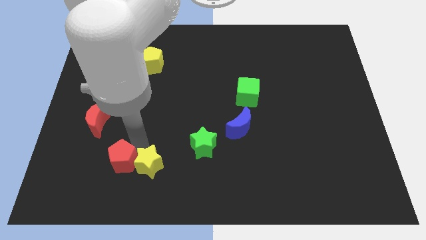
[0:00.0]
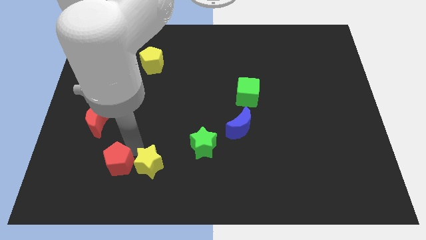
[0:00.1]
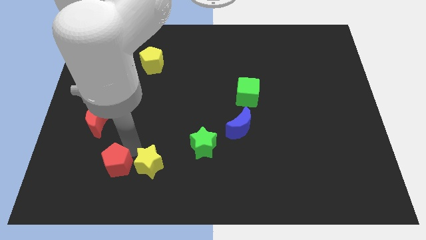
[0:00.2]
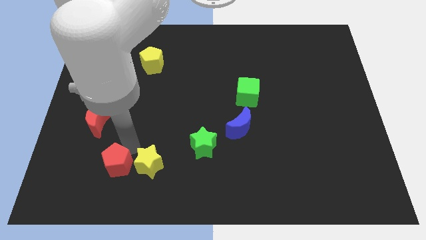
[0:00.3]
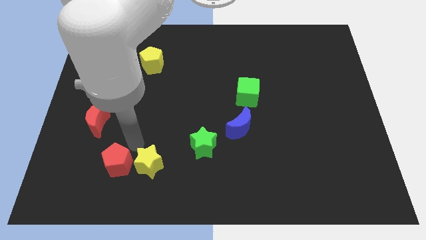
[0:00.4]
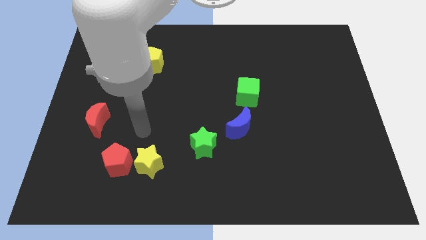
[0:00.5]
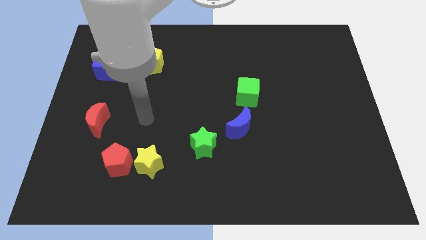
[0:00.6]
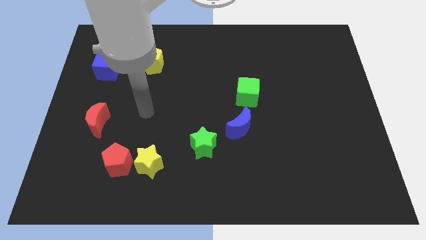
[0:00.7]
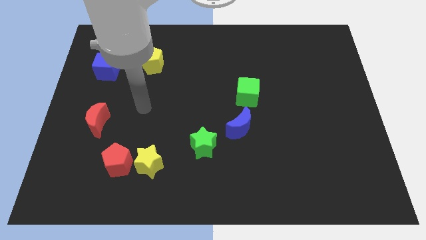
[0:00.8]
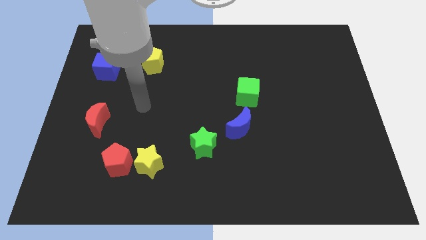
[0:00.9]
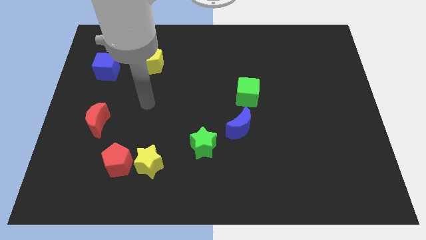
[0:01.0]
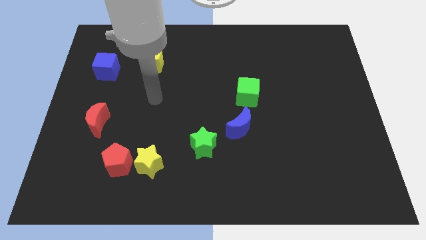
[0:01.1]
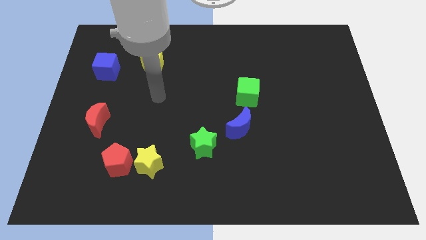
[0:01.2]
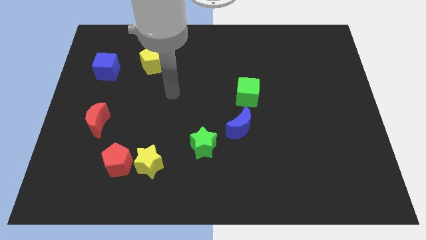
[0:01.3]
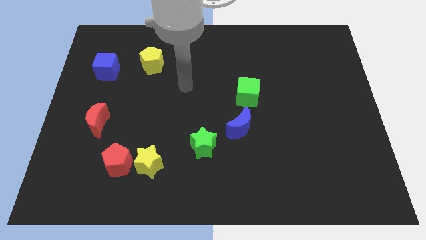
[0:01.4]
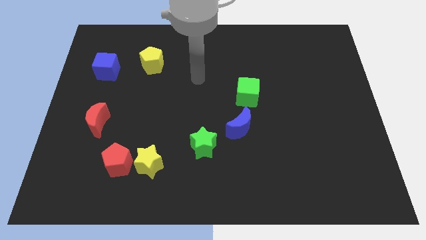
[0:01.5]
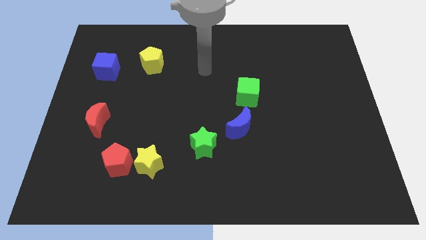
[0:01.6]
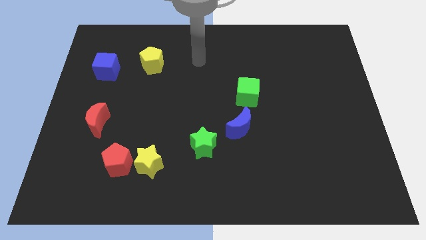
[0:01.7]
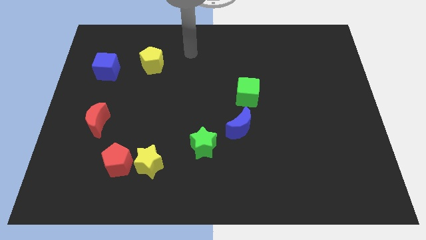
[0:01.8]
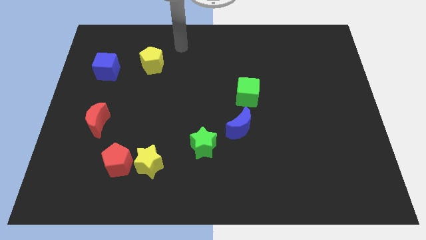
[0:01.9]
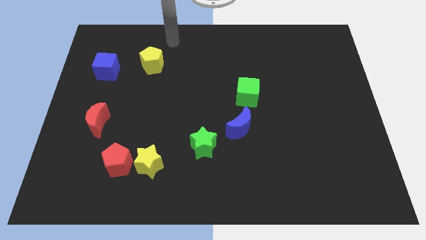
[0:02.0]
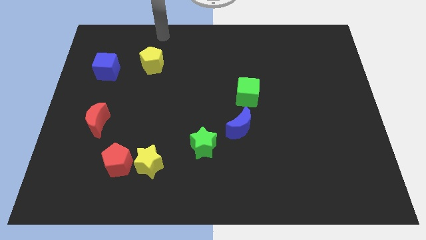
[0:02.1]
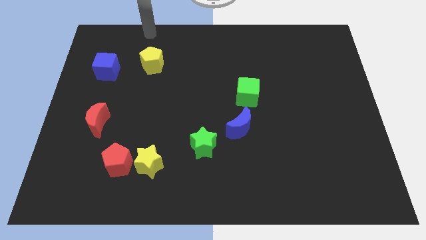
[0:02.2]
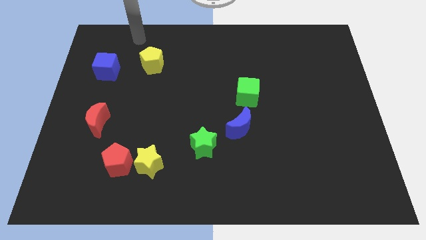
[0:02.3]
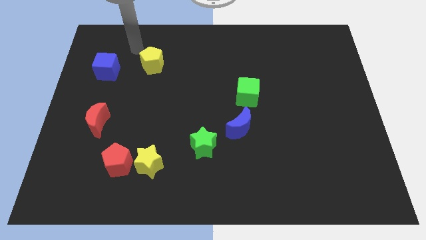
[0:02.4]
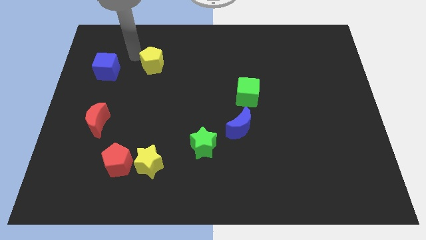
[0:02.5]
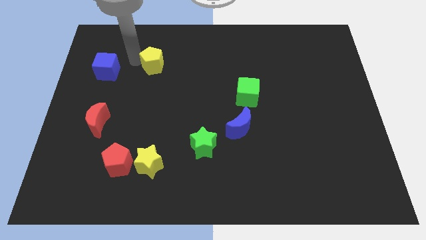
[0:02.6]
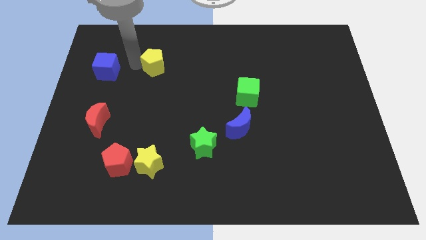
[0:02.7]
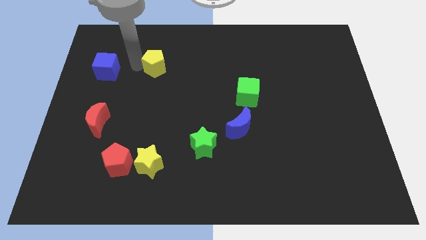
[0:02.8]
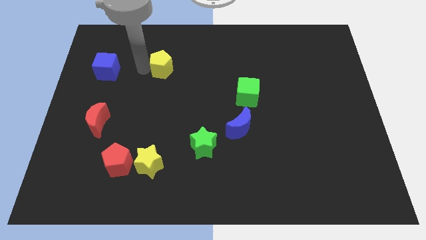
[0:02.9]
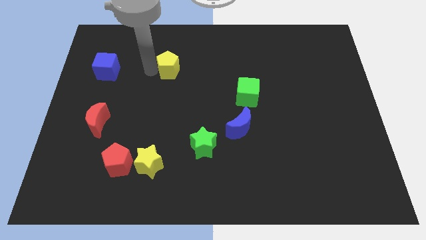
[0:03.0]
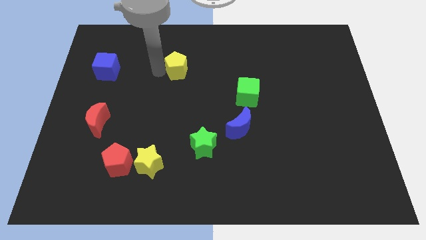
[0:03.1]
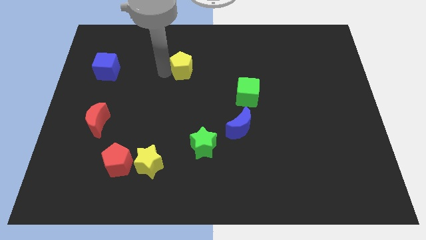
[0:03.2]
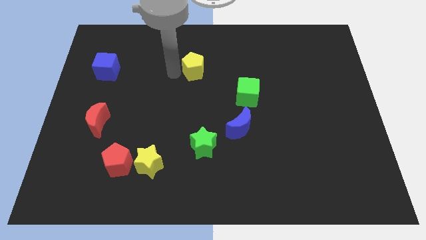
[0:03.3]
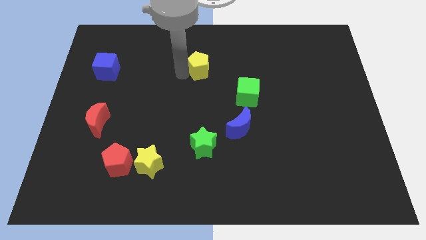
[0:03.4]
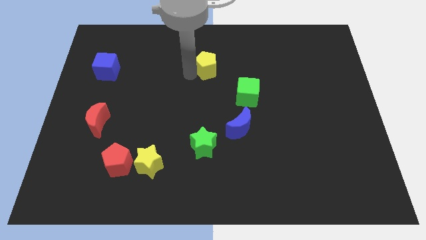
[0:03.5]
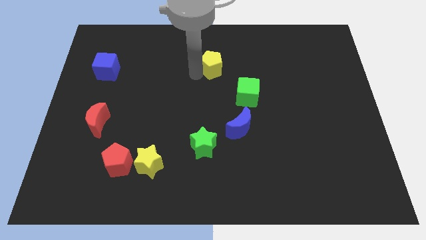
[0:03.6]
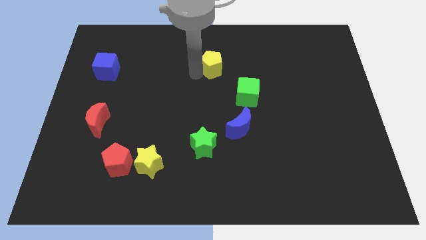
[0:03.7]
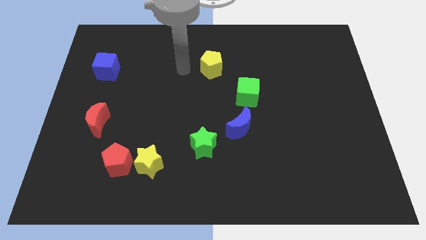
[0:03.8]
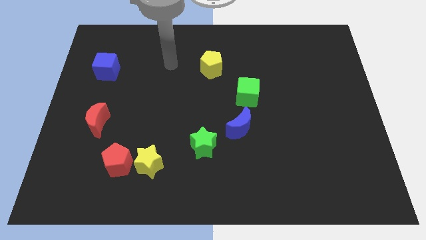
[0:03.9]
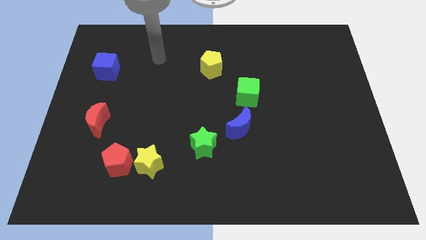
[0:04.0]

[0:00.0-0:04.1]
move the arm away from the red pentagon

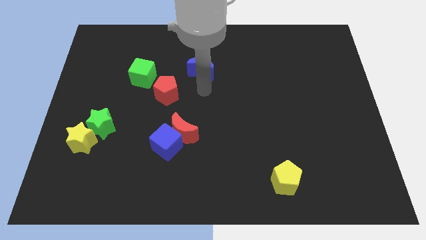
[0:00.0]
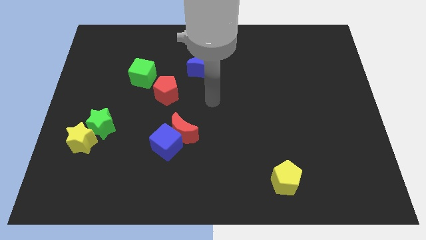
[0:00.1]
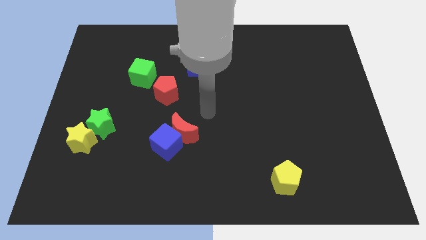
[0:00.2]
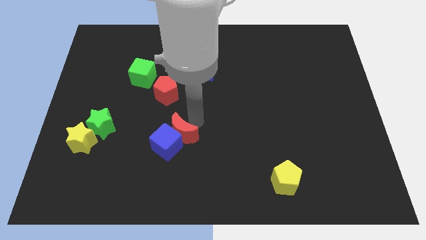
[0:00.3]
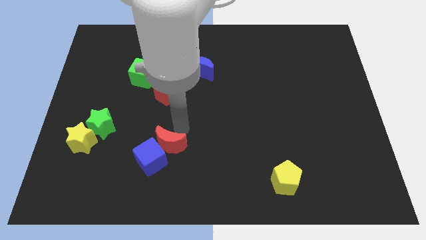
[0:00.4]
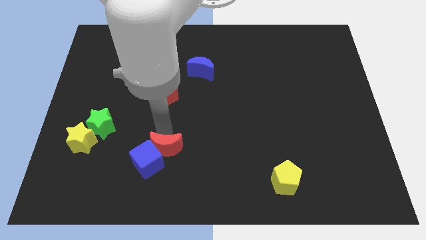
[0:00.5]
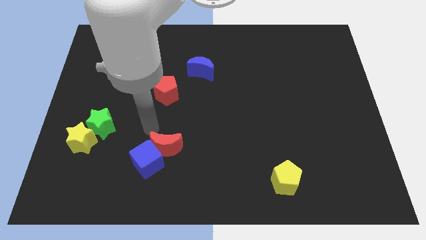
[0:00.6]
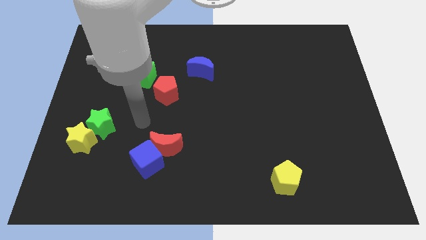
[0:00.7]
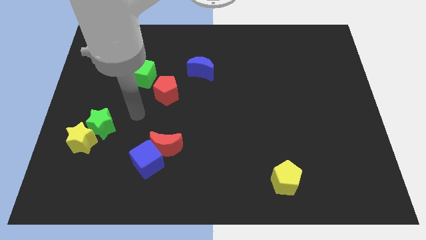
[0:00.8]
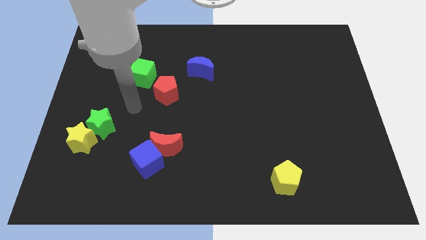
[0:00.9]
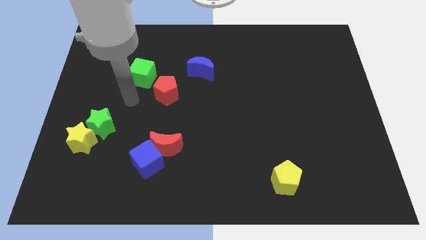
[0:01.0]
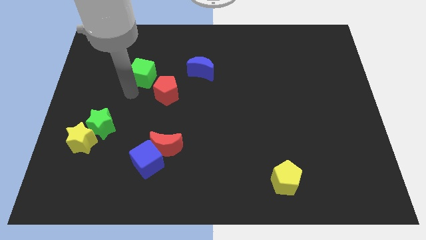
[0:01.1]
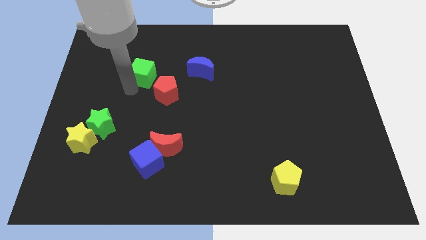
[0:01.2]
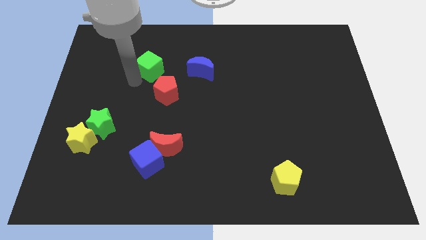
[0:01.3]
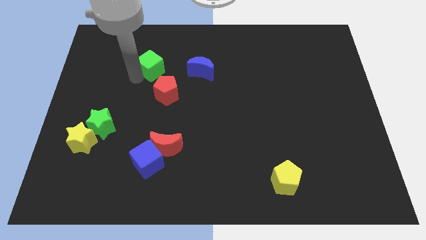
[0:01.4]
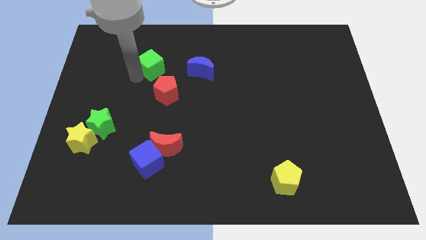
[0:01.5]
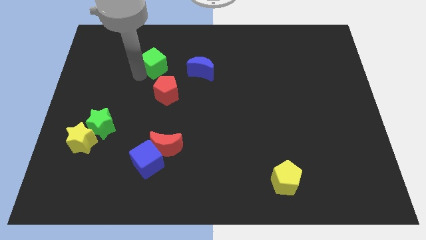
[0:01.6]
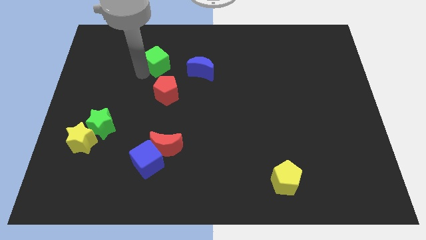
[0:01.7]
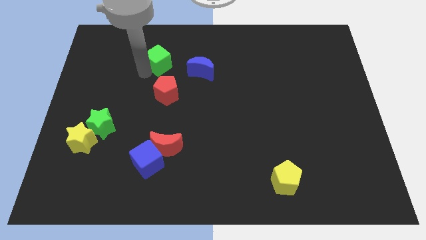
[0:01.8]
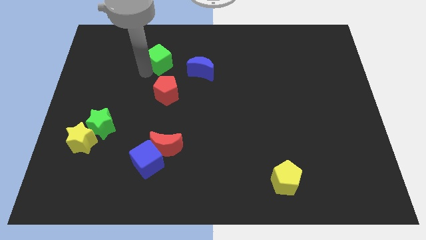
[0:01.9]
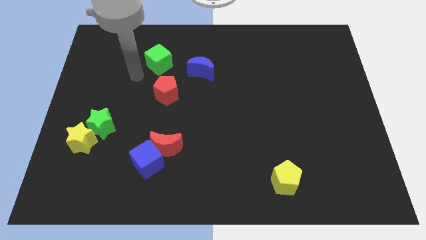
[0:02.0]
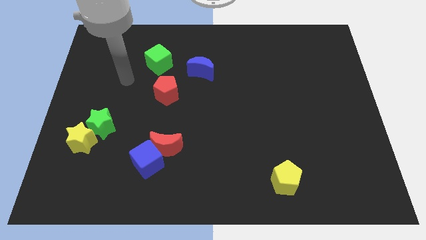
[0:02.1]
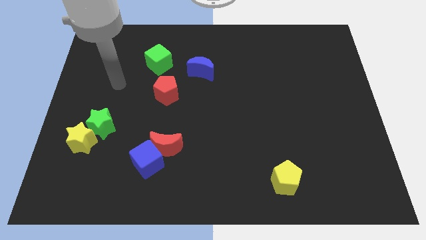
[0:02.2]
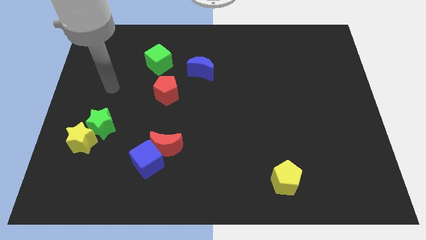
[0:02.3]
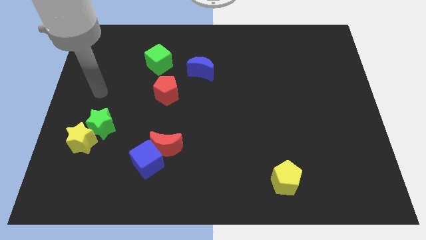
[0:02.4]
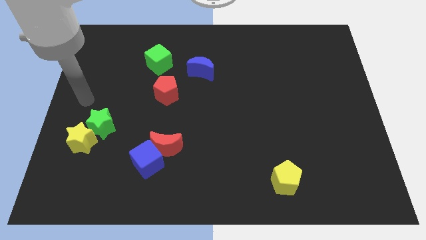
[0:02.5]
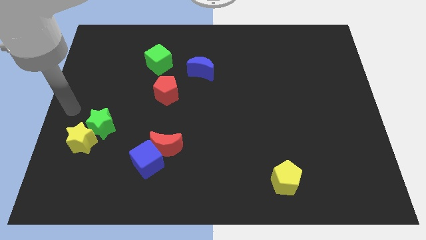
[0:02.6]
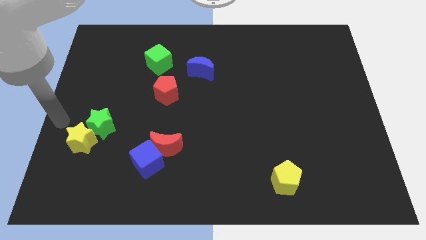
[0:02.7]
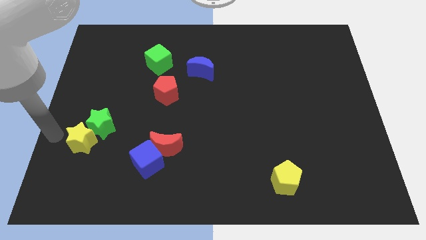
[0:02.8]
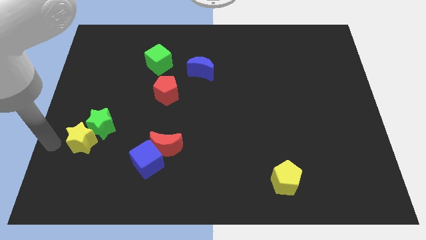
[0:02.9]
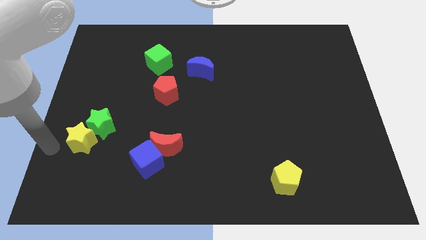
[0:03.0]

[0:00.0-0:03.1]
put the green cube on the left side of the blue crescent

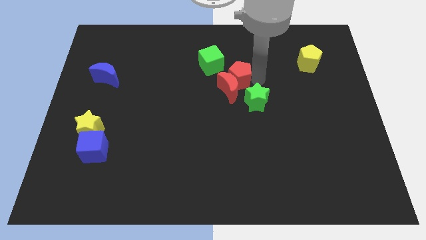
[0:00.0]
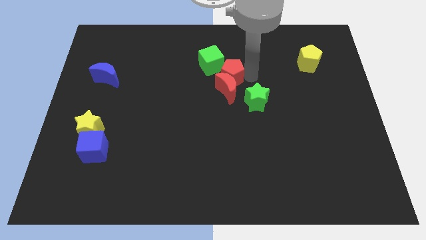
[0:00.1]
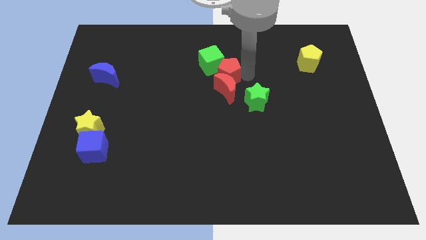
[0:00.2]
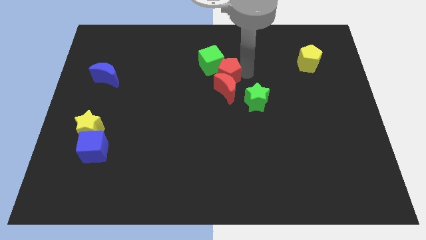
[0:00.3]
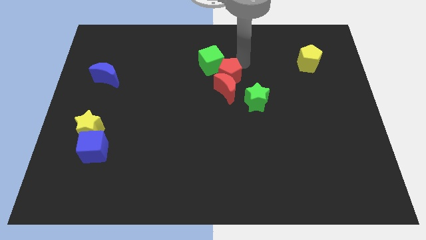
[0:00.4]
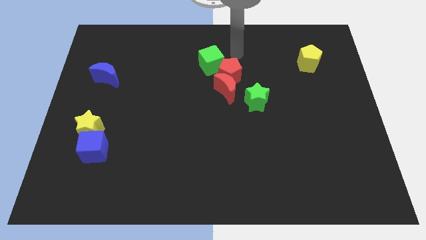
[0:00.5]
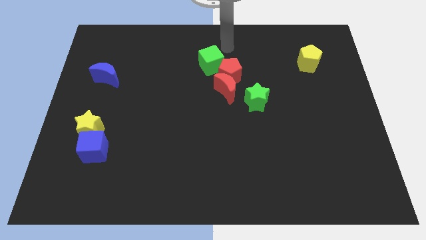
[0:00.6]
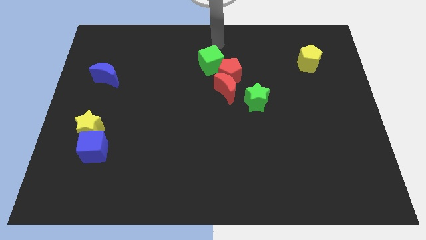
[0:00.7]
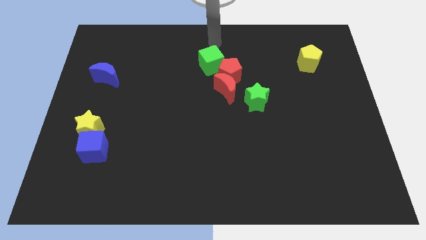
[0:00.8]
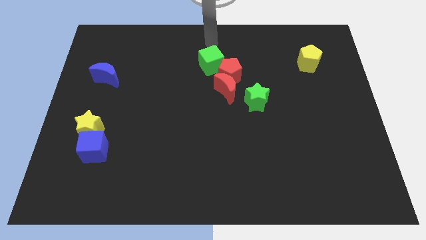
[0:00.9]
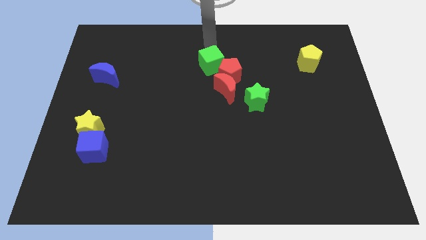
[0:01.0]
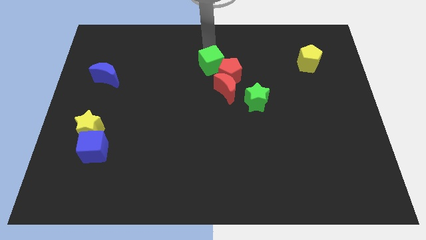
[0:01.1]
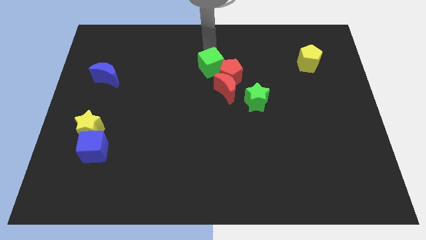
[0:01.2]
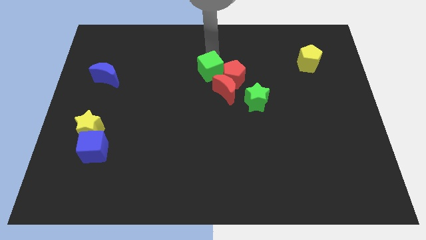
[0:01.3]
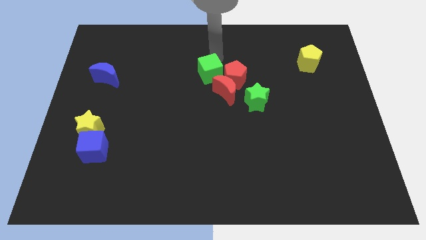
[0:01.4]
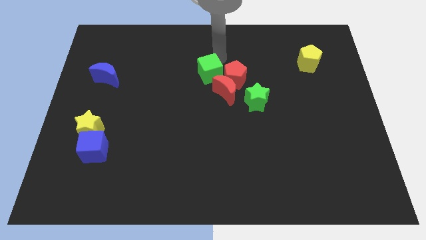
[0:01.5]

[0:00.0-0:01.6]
push the green cube into the red pentagon

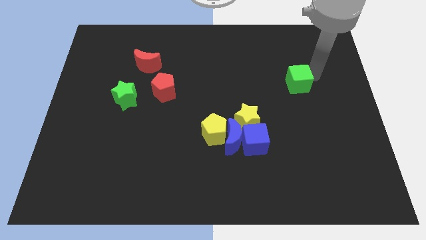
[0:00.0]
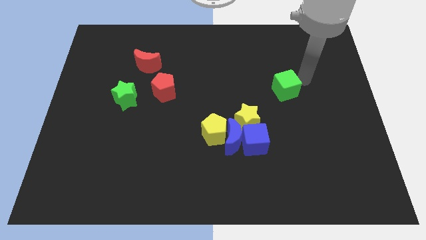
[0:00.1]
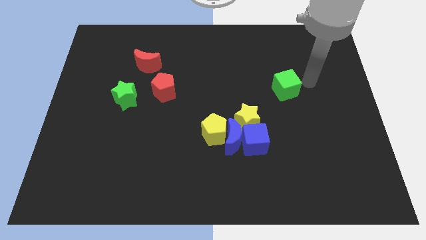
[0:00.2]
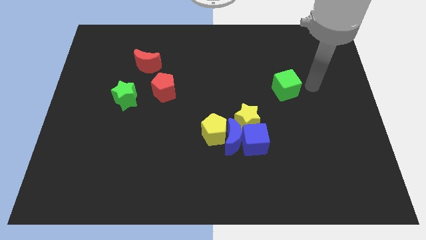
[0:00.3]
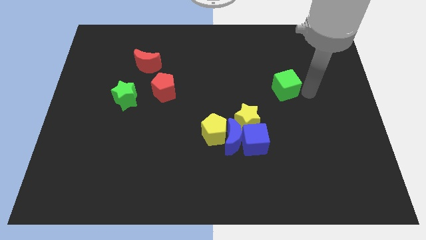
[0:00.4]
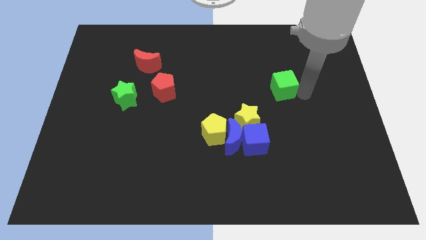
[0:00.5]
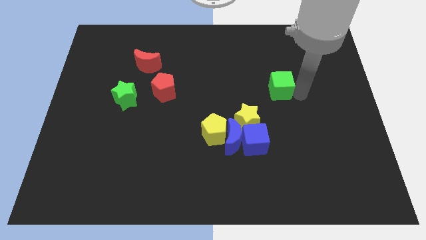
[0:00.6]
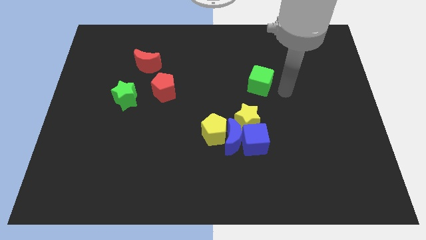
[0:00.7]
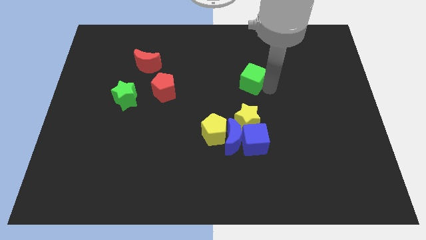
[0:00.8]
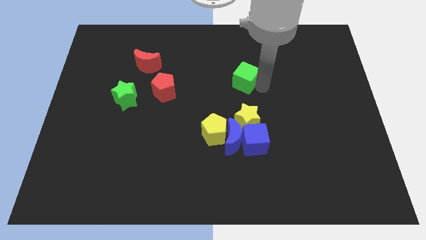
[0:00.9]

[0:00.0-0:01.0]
place the green cube vertically above the yellow star
